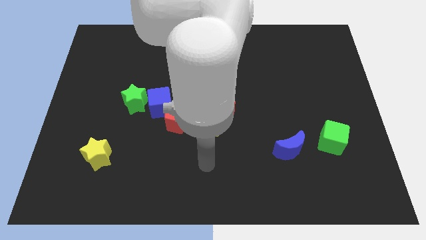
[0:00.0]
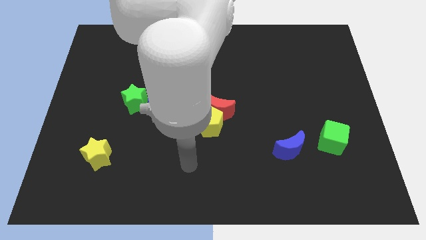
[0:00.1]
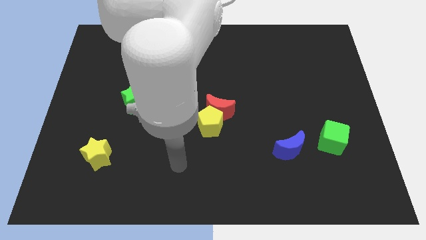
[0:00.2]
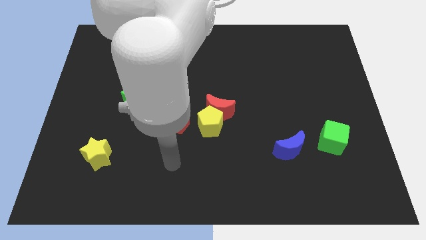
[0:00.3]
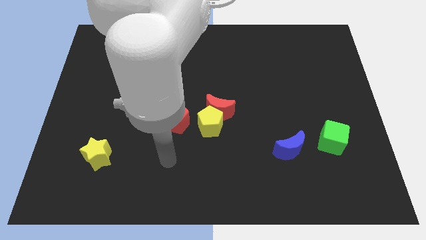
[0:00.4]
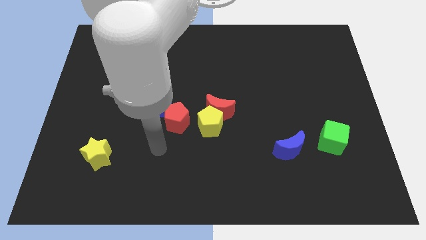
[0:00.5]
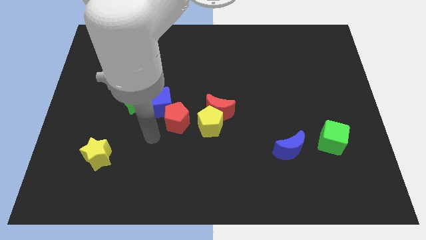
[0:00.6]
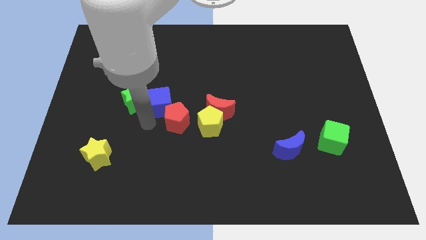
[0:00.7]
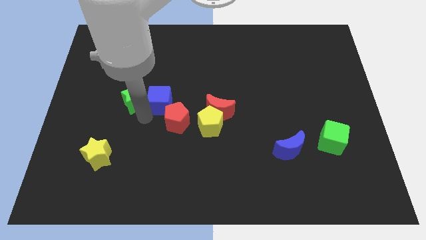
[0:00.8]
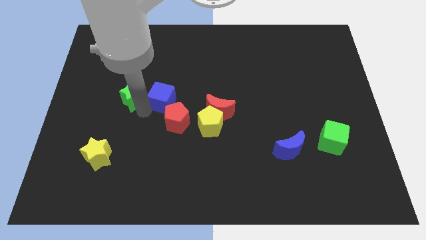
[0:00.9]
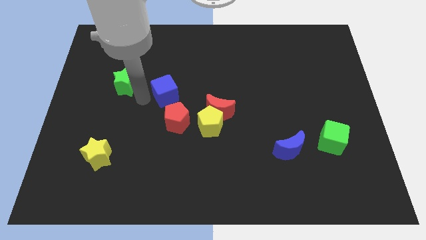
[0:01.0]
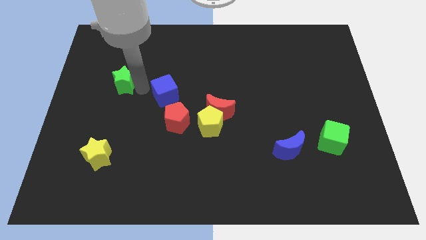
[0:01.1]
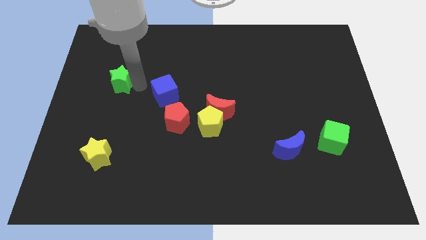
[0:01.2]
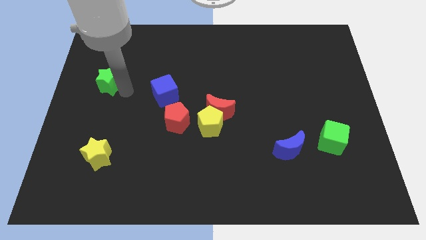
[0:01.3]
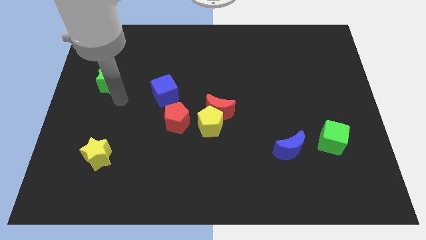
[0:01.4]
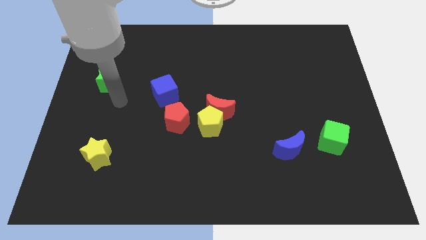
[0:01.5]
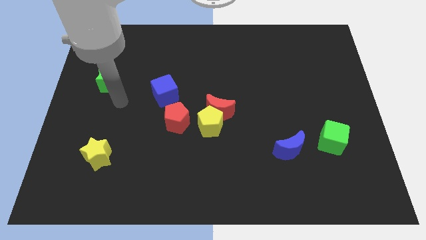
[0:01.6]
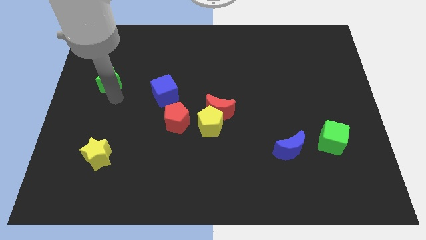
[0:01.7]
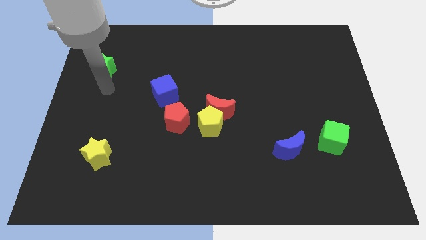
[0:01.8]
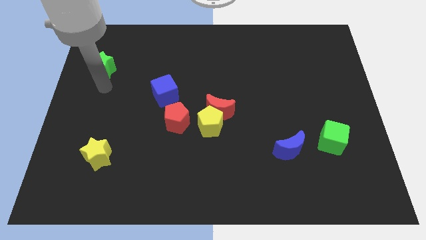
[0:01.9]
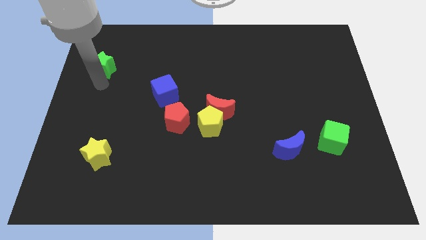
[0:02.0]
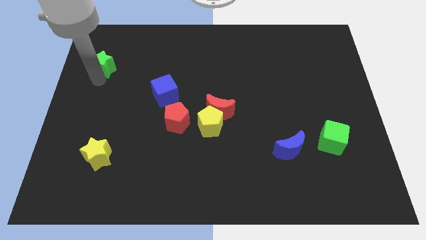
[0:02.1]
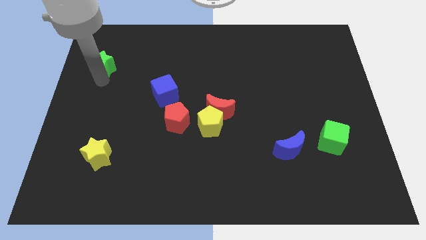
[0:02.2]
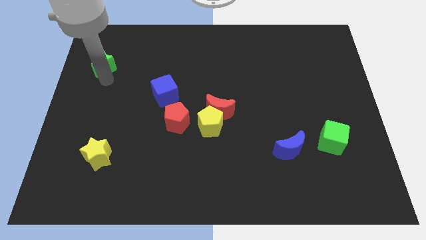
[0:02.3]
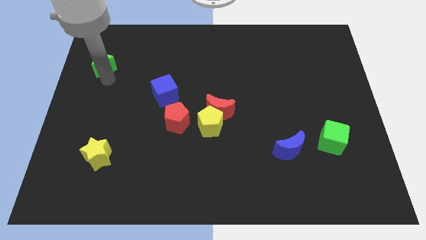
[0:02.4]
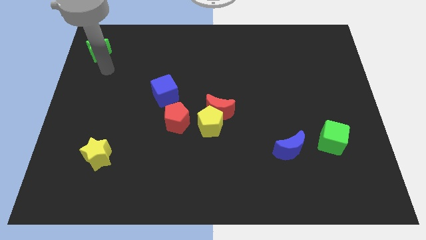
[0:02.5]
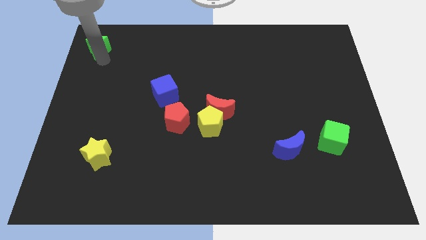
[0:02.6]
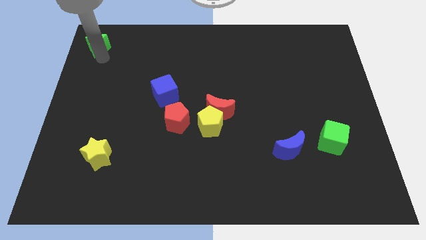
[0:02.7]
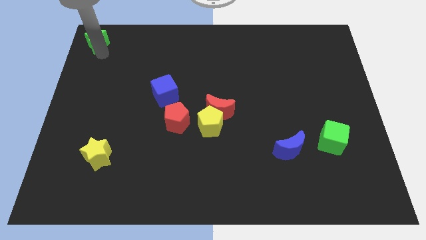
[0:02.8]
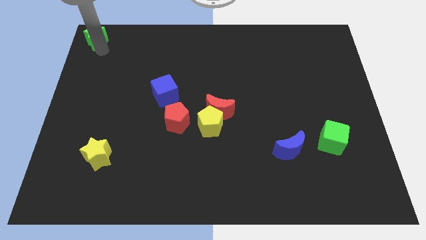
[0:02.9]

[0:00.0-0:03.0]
separate the green star from the blue cube

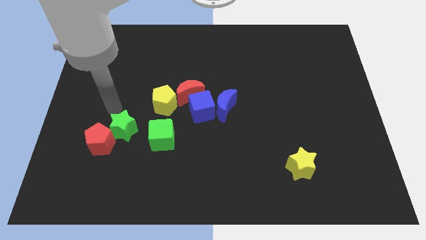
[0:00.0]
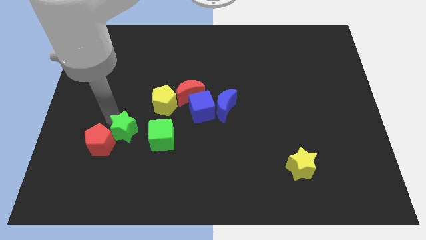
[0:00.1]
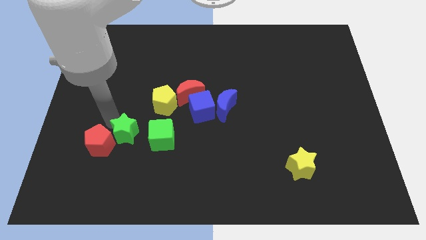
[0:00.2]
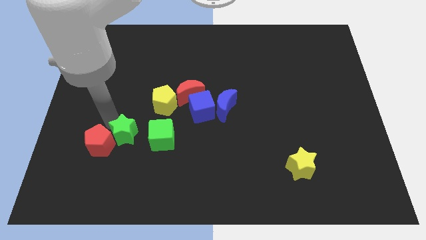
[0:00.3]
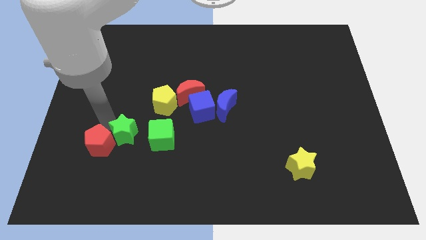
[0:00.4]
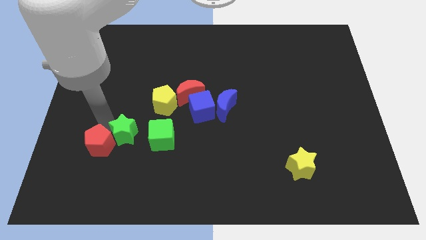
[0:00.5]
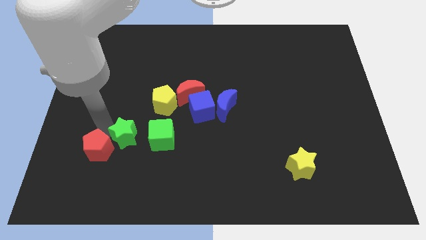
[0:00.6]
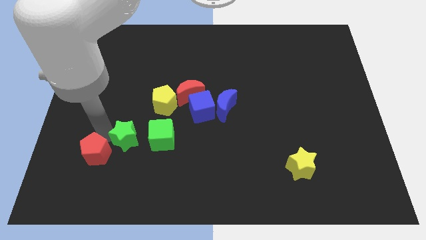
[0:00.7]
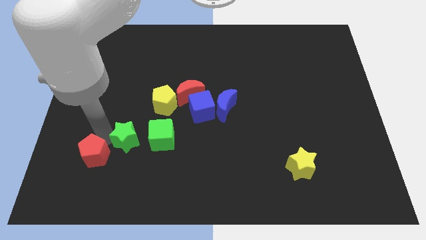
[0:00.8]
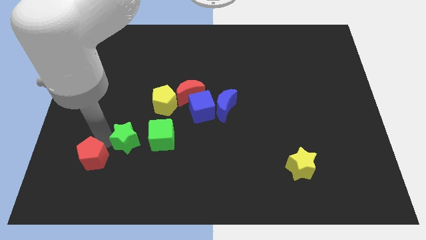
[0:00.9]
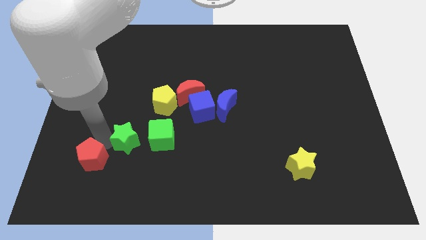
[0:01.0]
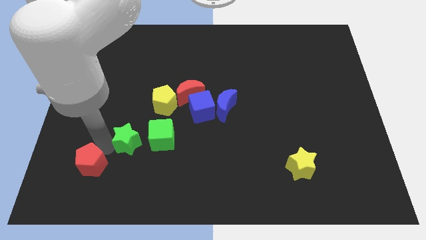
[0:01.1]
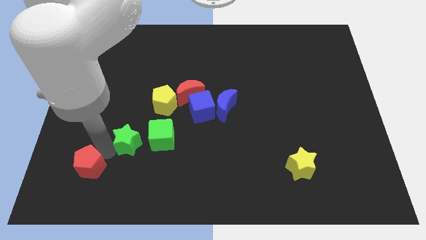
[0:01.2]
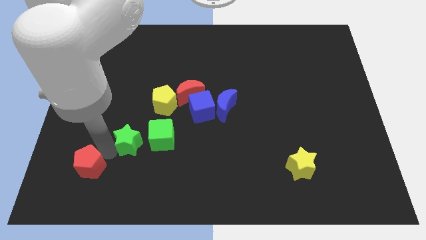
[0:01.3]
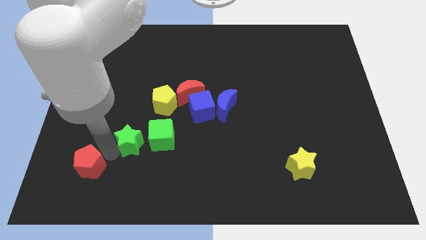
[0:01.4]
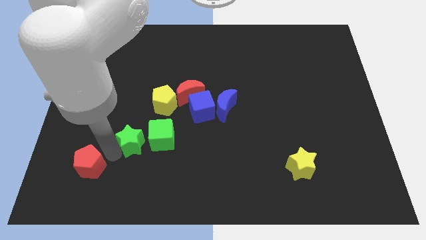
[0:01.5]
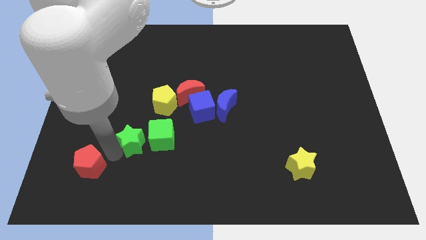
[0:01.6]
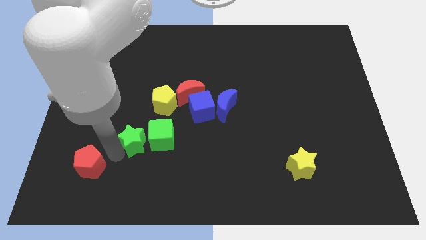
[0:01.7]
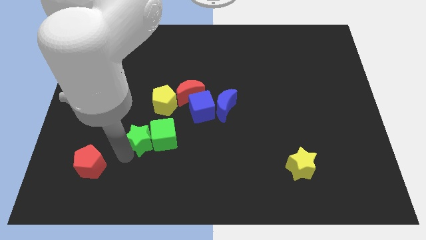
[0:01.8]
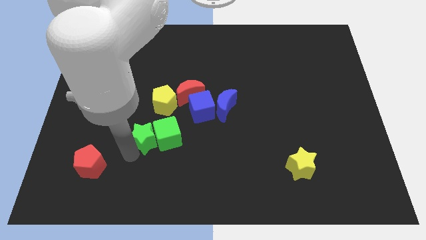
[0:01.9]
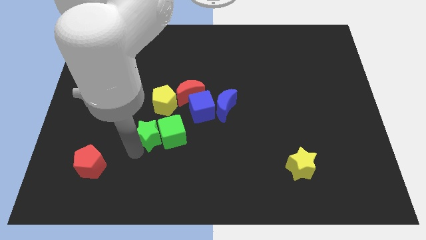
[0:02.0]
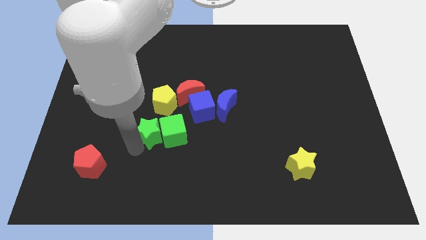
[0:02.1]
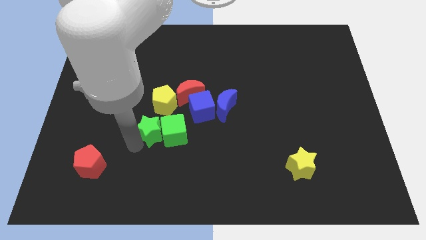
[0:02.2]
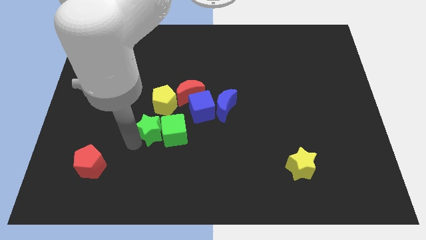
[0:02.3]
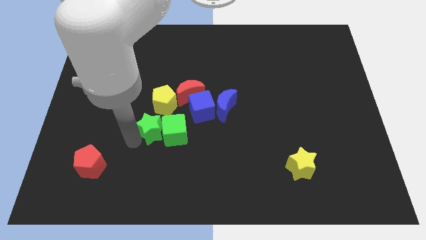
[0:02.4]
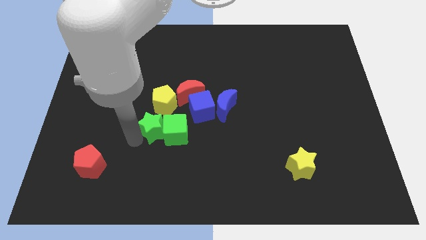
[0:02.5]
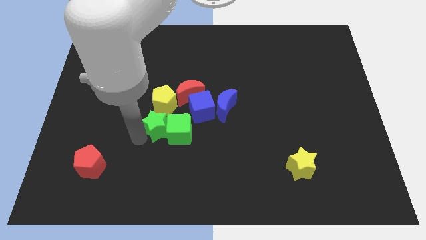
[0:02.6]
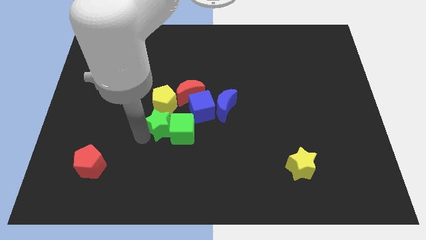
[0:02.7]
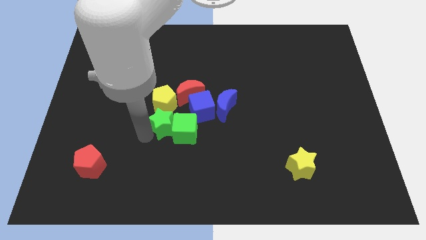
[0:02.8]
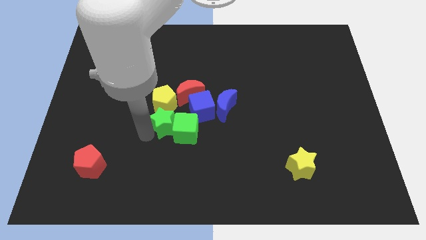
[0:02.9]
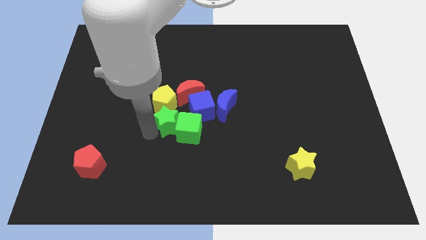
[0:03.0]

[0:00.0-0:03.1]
move green star into green cube

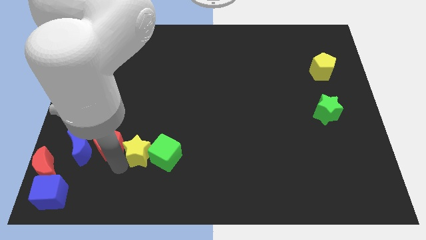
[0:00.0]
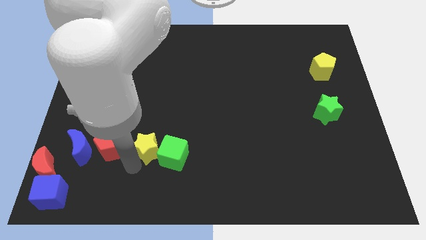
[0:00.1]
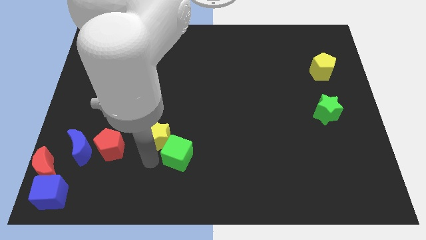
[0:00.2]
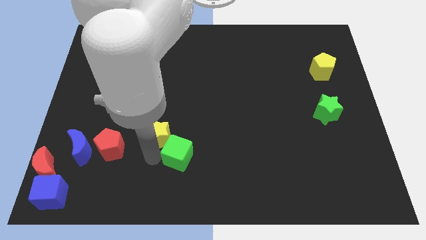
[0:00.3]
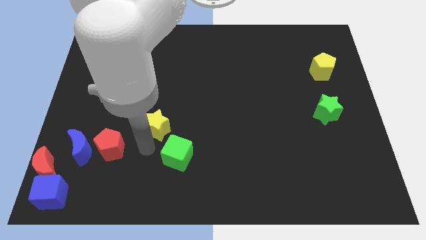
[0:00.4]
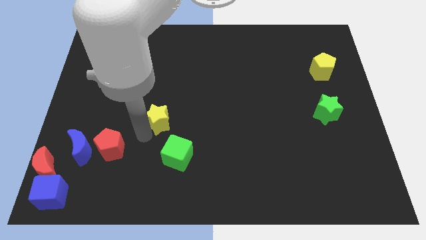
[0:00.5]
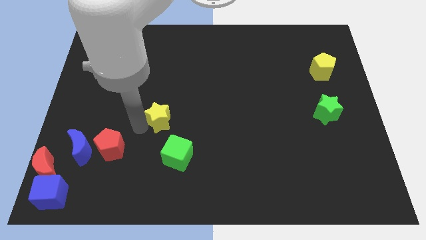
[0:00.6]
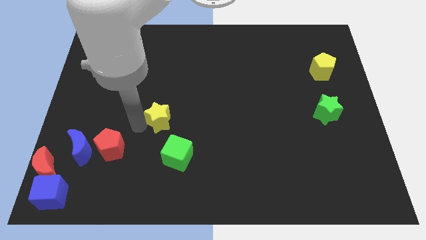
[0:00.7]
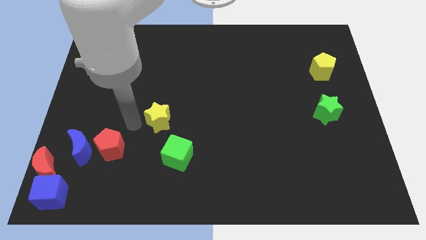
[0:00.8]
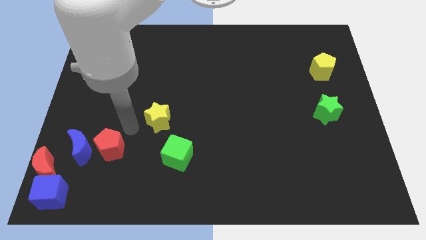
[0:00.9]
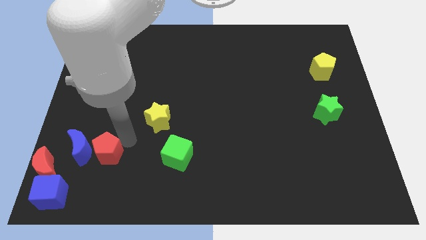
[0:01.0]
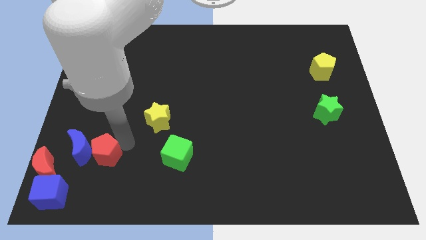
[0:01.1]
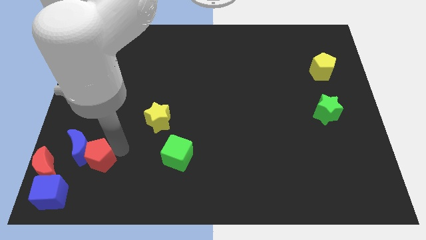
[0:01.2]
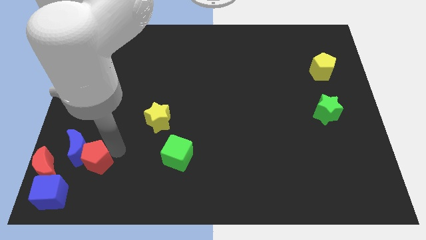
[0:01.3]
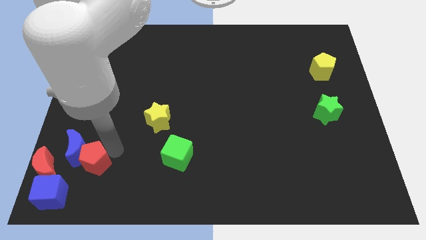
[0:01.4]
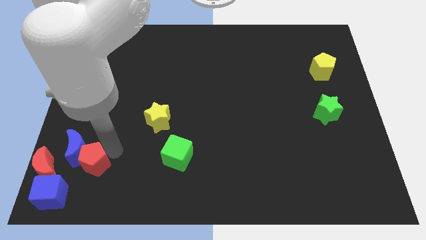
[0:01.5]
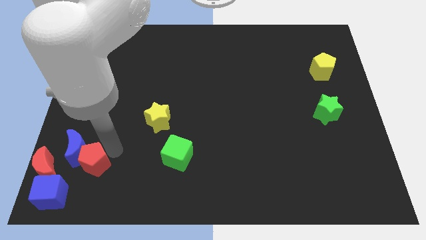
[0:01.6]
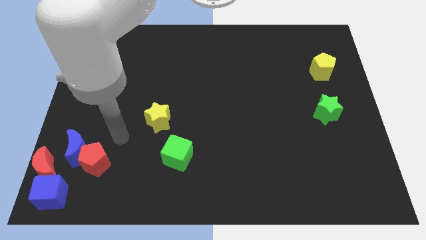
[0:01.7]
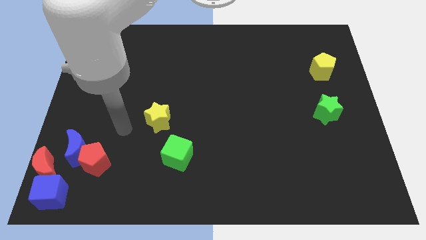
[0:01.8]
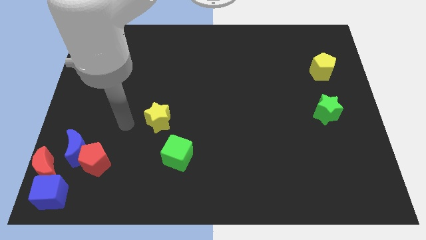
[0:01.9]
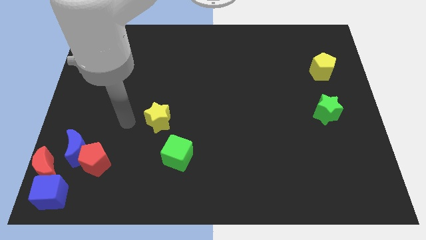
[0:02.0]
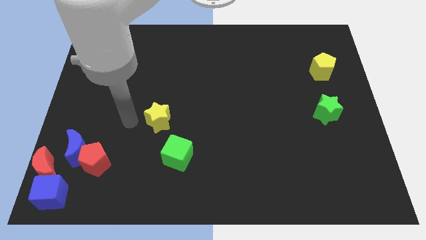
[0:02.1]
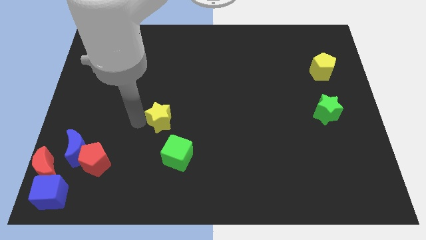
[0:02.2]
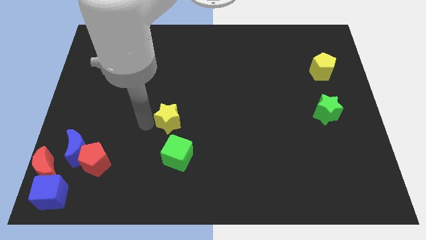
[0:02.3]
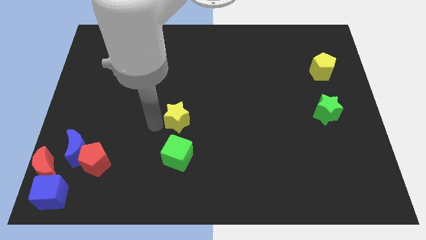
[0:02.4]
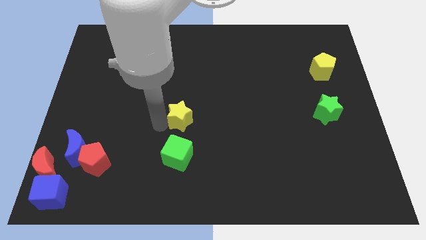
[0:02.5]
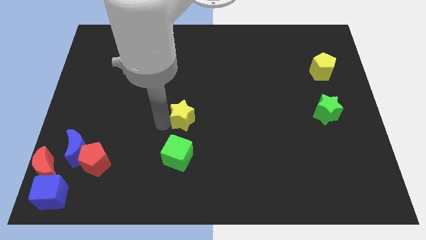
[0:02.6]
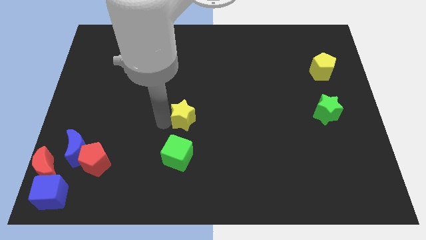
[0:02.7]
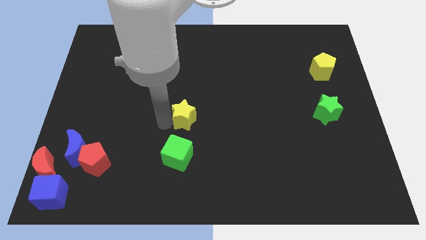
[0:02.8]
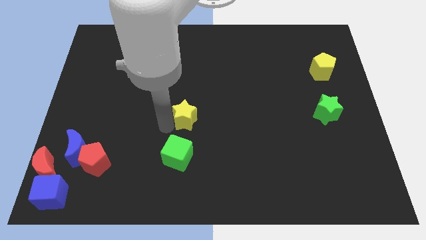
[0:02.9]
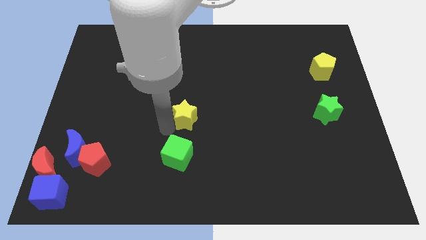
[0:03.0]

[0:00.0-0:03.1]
move the yellow star above the green cube
